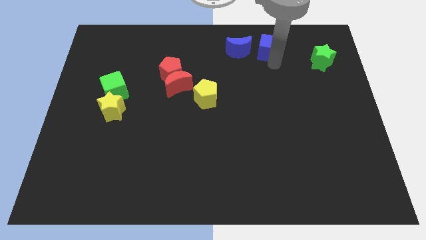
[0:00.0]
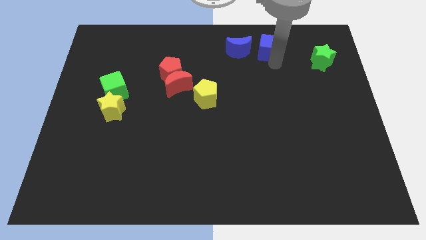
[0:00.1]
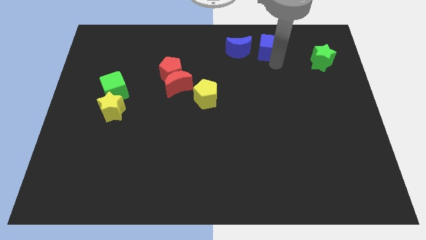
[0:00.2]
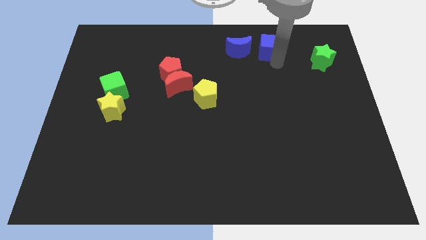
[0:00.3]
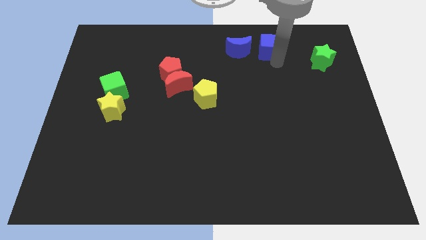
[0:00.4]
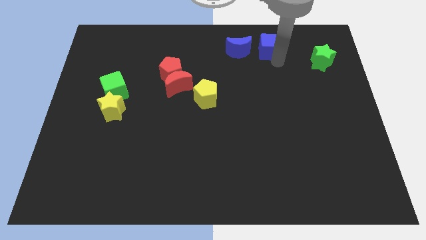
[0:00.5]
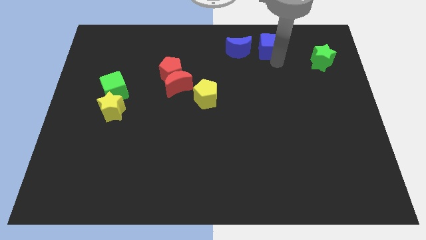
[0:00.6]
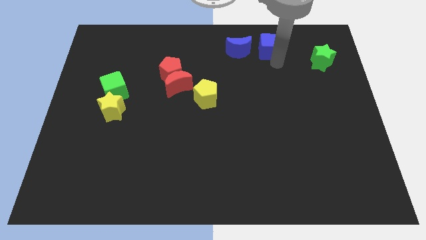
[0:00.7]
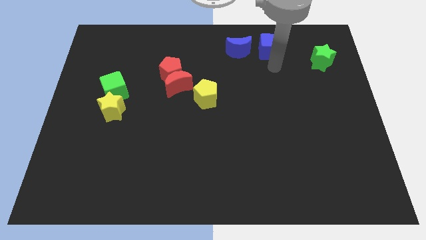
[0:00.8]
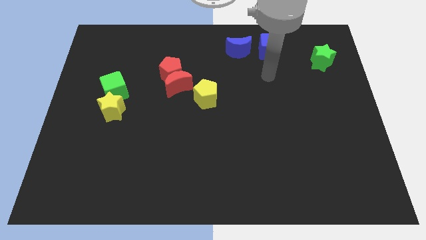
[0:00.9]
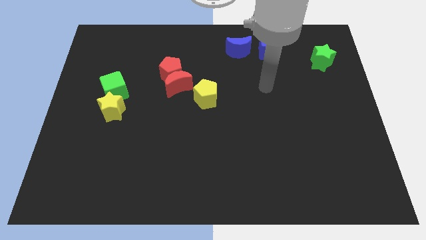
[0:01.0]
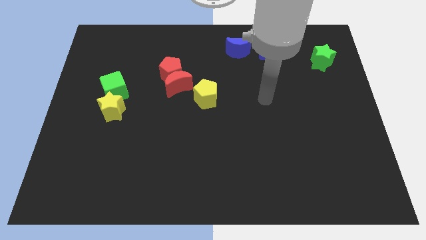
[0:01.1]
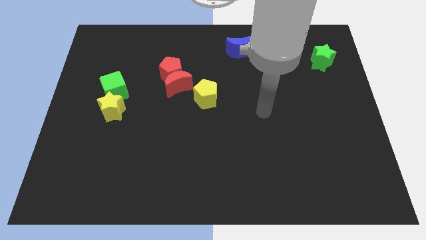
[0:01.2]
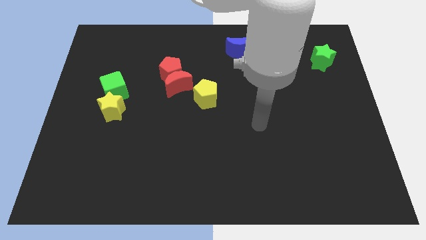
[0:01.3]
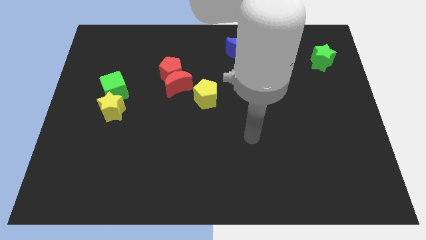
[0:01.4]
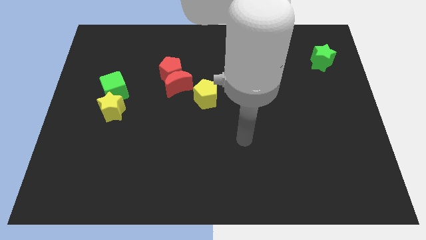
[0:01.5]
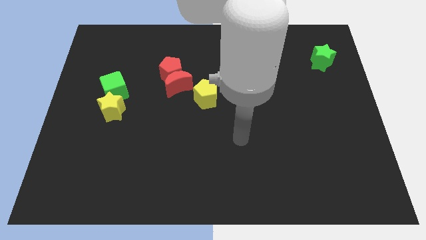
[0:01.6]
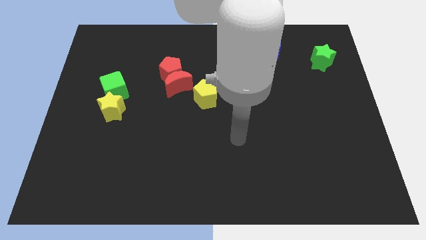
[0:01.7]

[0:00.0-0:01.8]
move yourself away from the blue cube

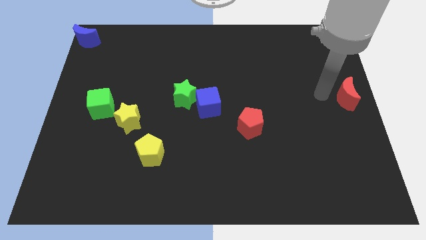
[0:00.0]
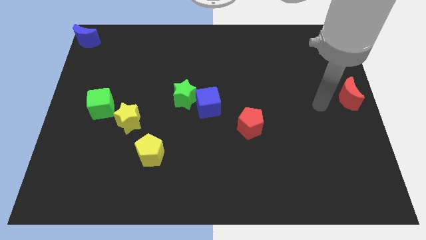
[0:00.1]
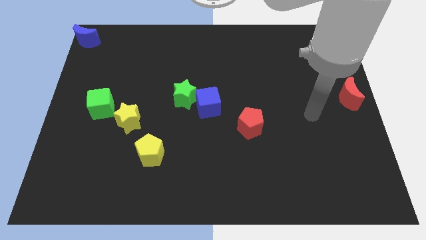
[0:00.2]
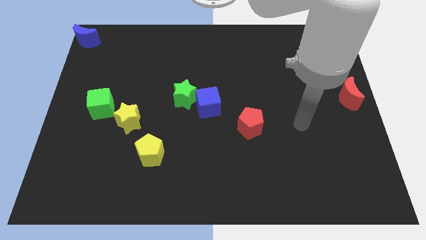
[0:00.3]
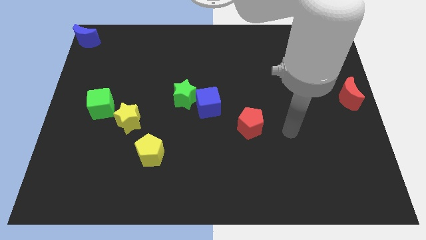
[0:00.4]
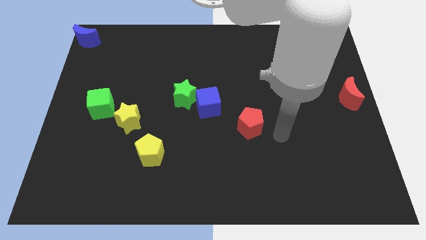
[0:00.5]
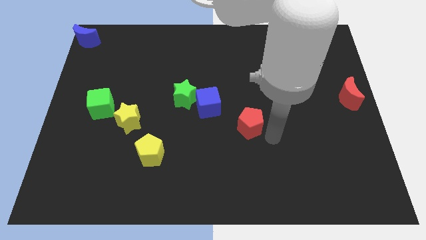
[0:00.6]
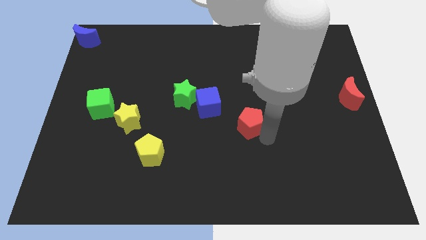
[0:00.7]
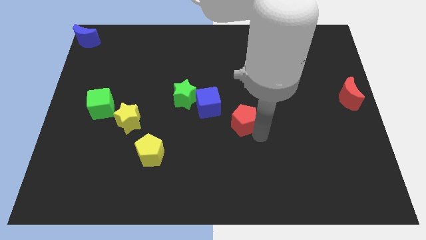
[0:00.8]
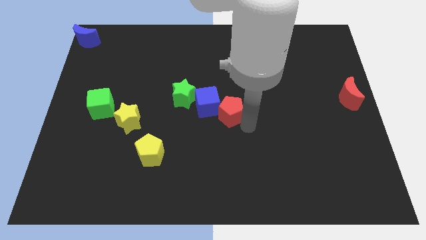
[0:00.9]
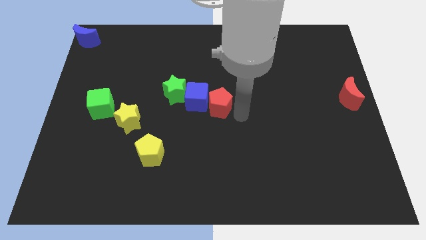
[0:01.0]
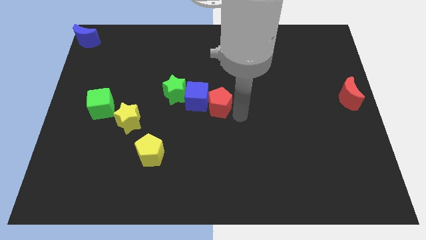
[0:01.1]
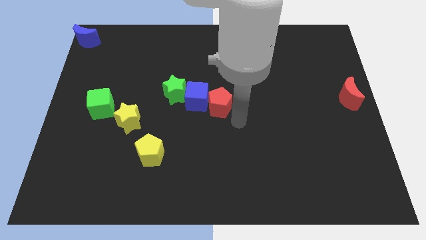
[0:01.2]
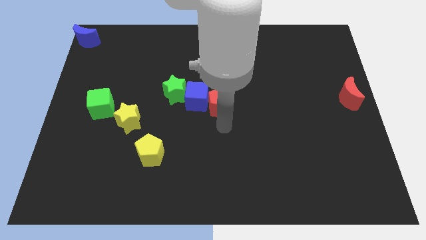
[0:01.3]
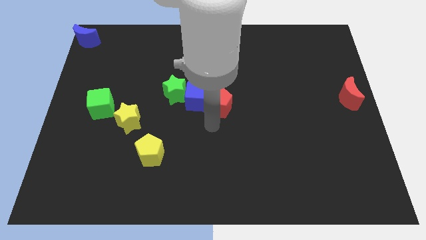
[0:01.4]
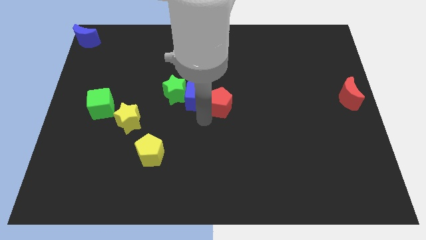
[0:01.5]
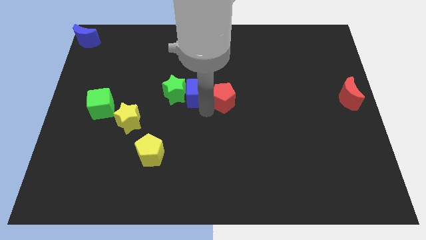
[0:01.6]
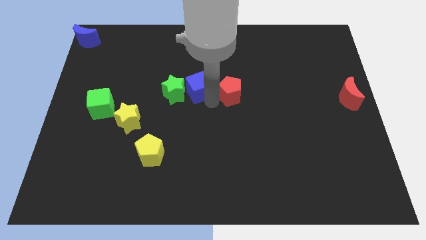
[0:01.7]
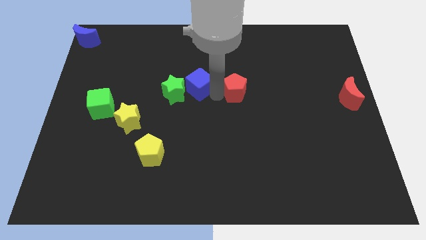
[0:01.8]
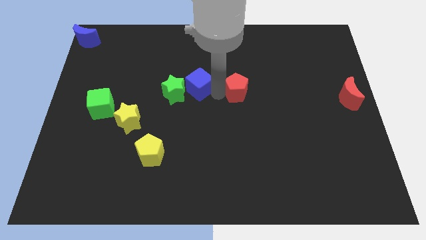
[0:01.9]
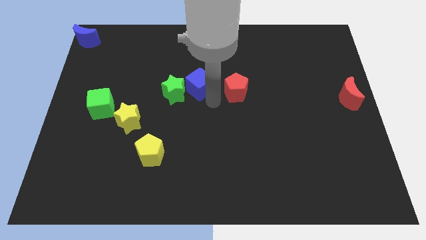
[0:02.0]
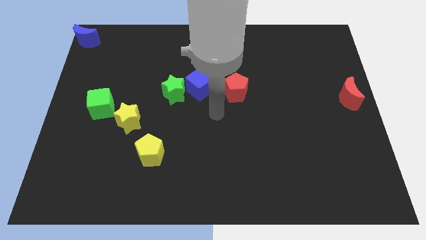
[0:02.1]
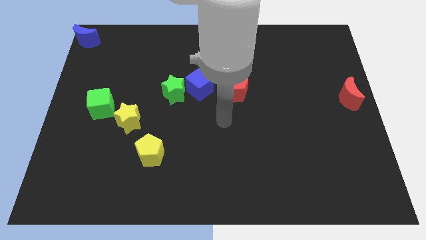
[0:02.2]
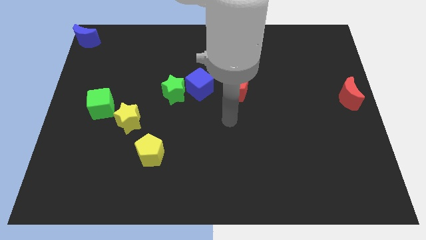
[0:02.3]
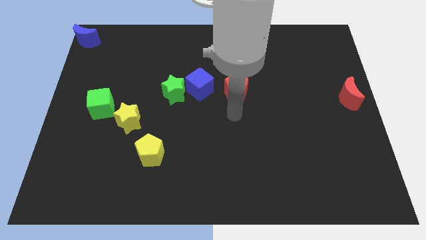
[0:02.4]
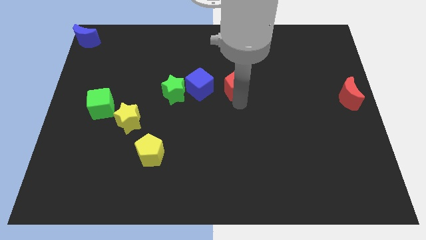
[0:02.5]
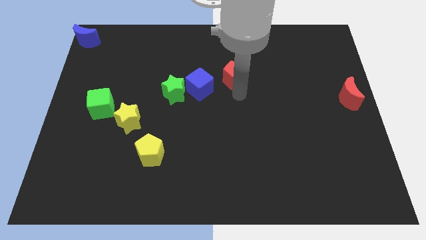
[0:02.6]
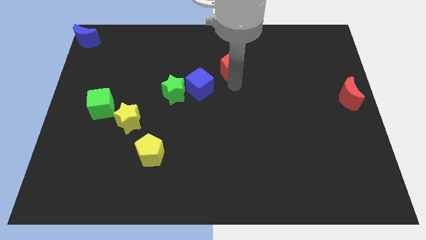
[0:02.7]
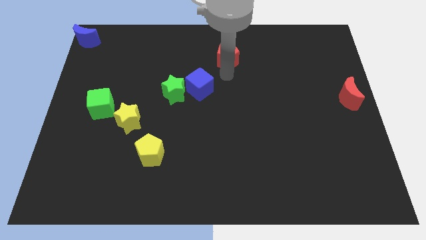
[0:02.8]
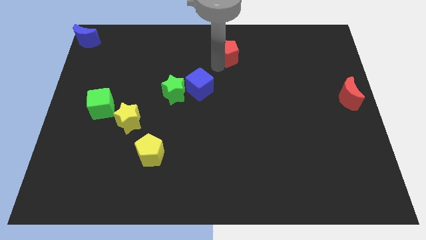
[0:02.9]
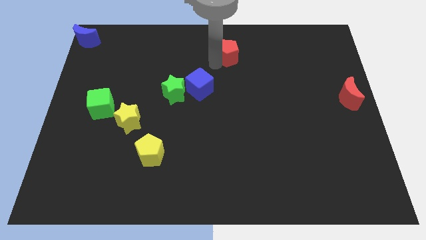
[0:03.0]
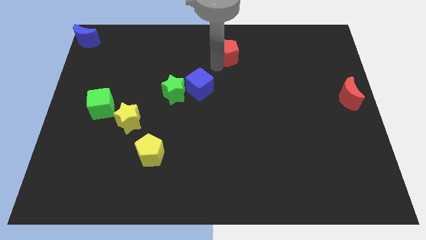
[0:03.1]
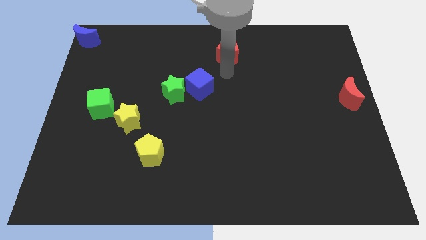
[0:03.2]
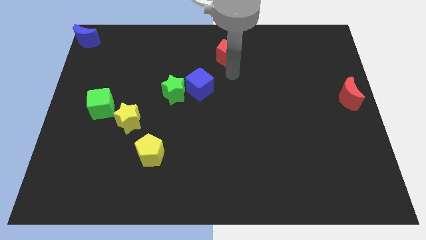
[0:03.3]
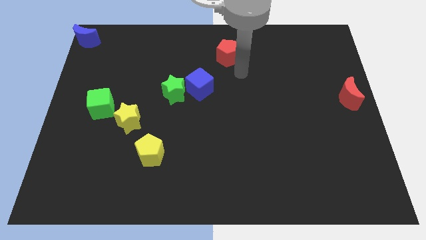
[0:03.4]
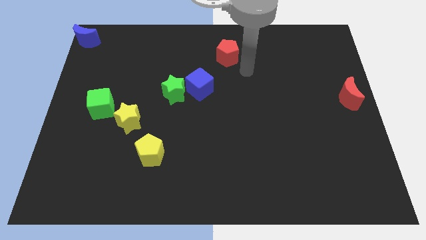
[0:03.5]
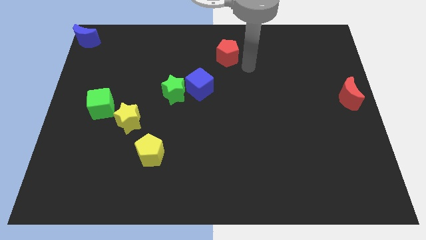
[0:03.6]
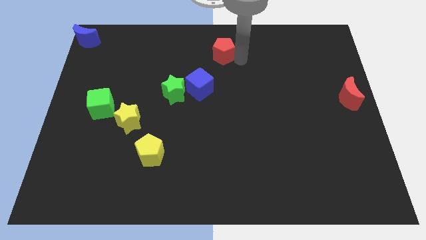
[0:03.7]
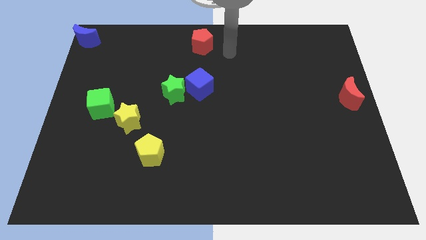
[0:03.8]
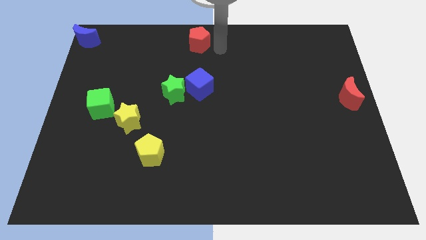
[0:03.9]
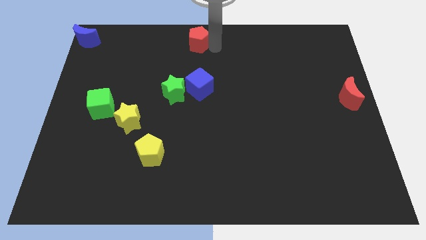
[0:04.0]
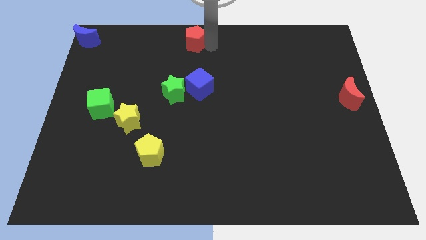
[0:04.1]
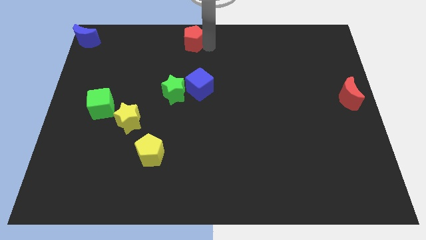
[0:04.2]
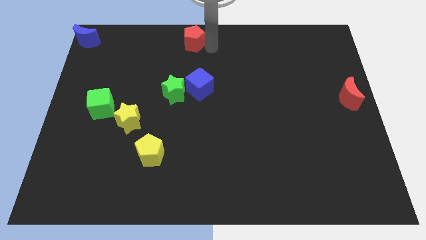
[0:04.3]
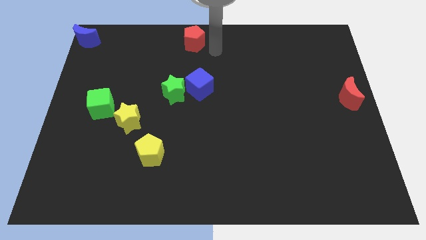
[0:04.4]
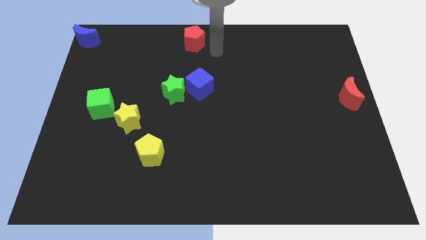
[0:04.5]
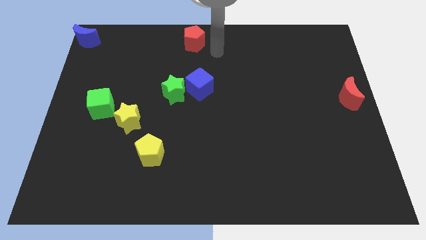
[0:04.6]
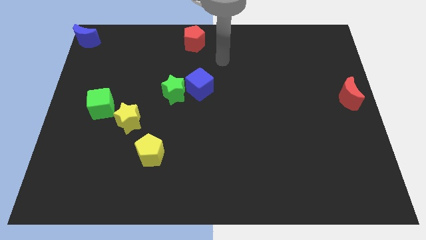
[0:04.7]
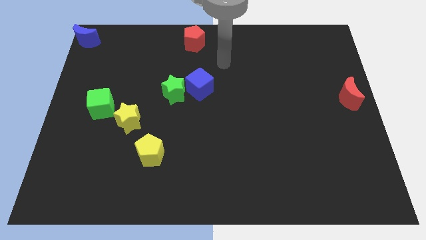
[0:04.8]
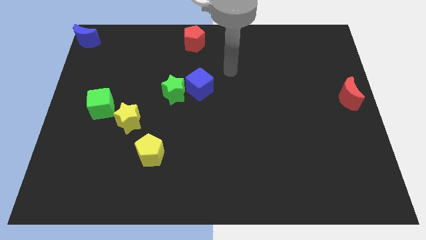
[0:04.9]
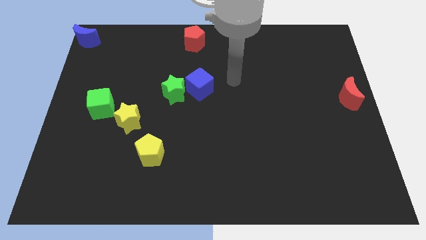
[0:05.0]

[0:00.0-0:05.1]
slide the red pentagon to the top center

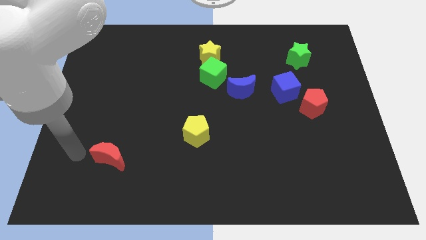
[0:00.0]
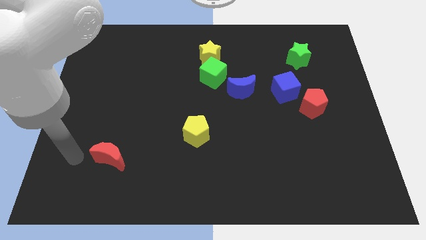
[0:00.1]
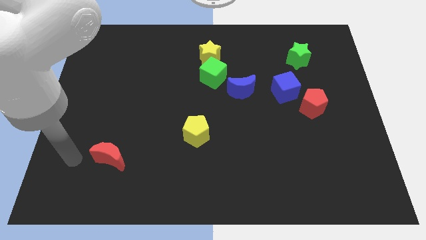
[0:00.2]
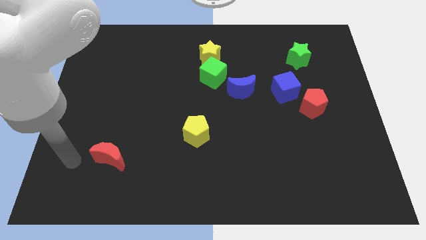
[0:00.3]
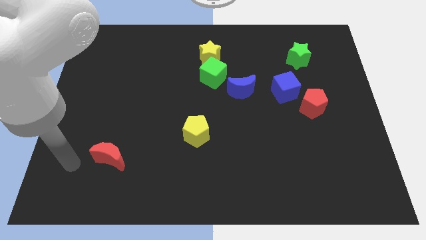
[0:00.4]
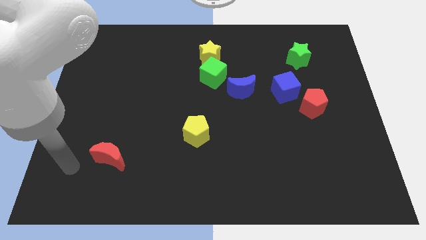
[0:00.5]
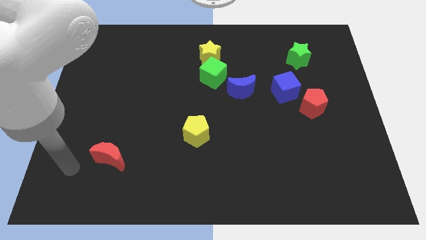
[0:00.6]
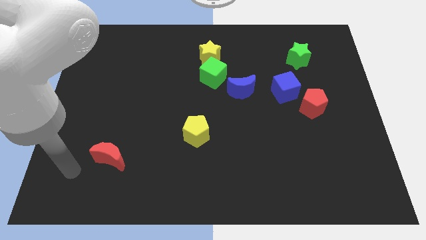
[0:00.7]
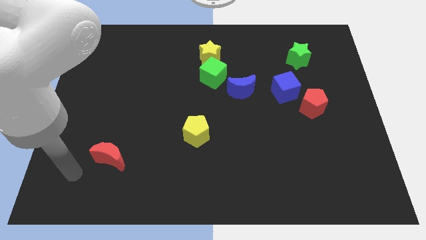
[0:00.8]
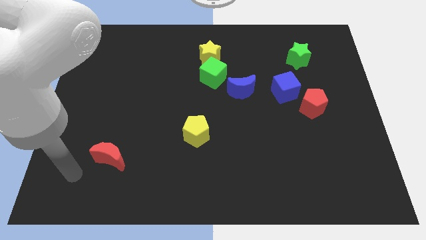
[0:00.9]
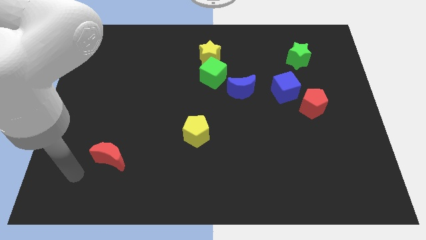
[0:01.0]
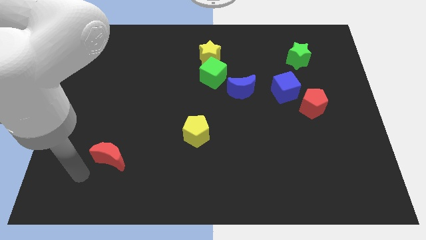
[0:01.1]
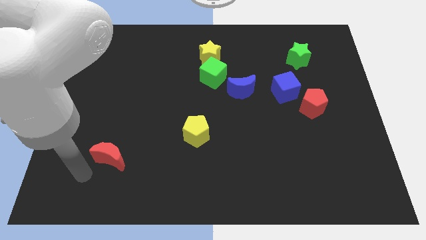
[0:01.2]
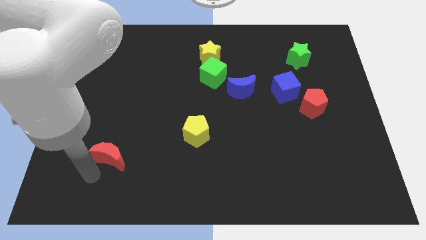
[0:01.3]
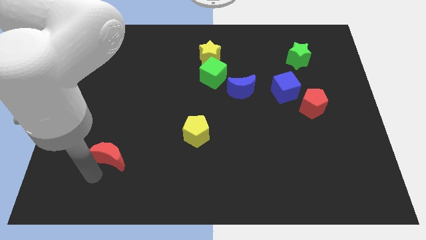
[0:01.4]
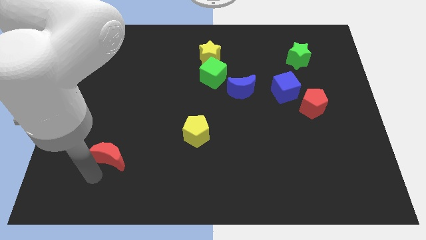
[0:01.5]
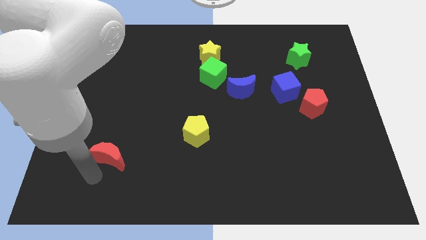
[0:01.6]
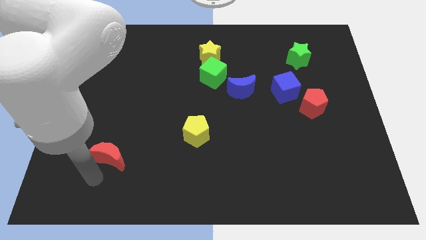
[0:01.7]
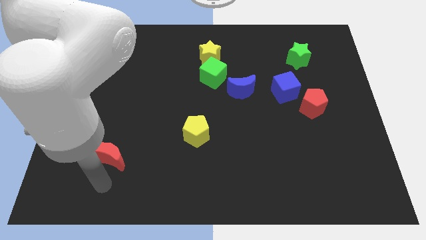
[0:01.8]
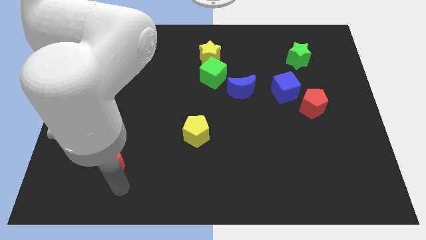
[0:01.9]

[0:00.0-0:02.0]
move your arm below the red moon
